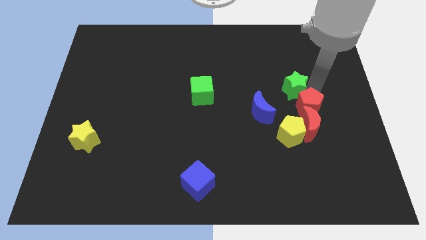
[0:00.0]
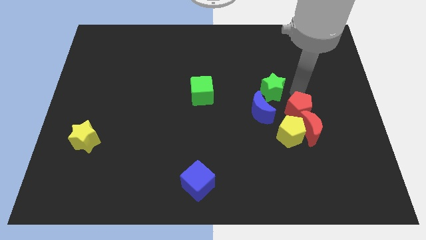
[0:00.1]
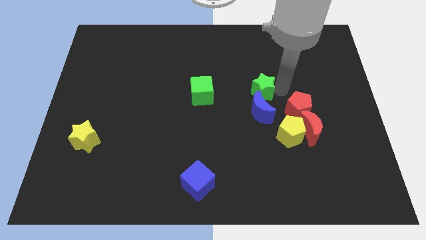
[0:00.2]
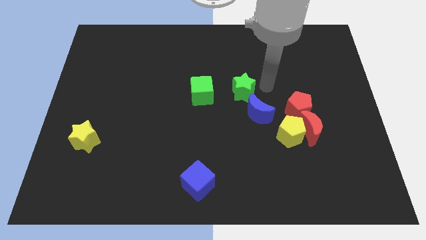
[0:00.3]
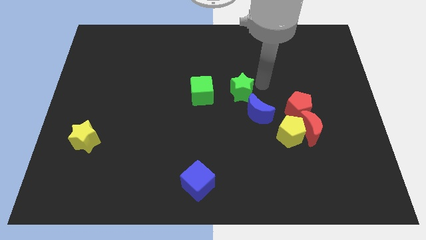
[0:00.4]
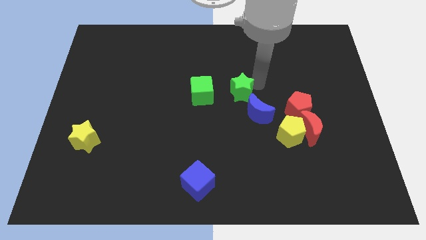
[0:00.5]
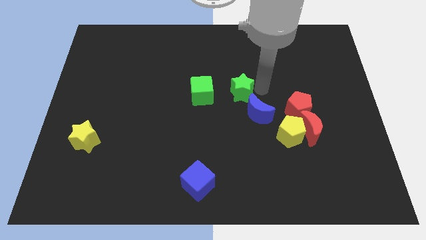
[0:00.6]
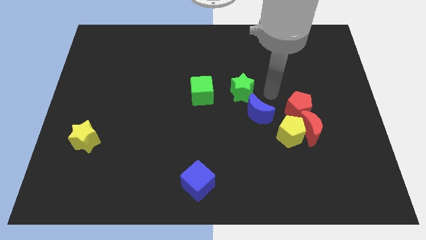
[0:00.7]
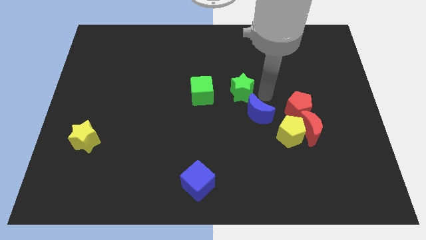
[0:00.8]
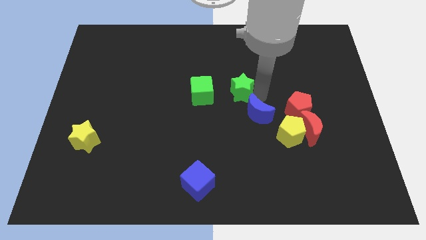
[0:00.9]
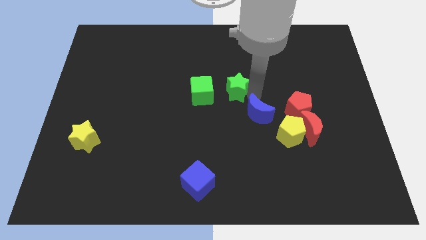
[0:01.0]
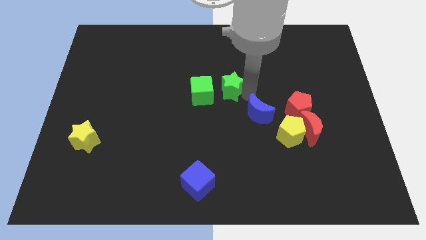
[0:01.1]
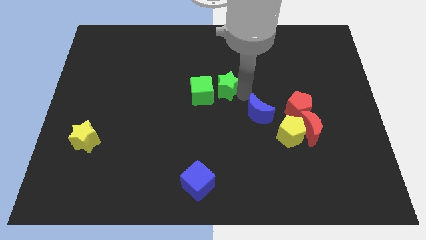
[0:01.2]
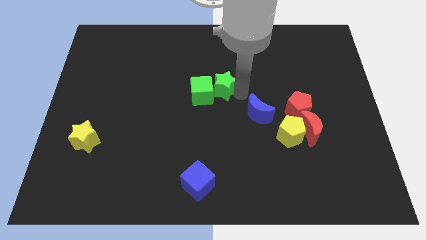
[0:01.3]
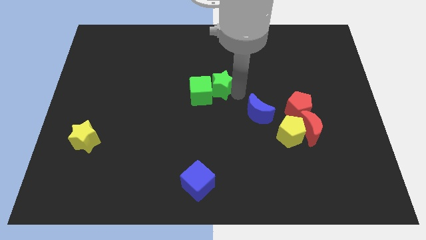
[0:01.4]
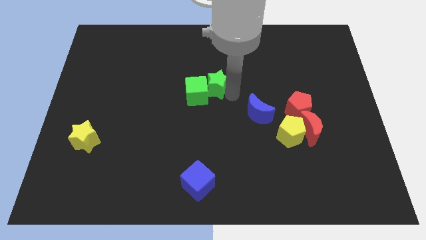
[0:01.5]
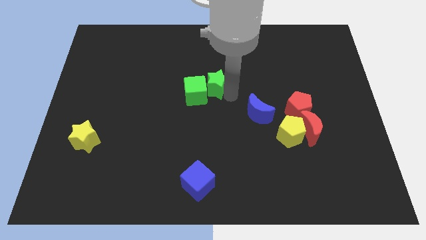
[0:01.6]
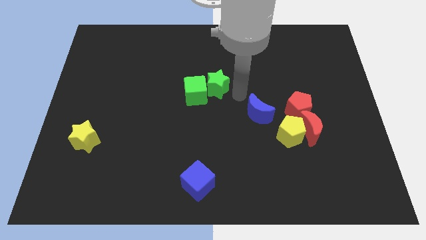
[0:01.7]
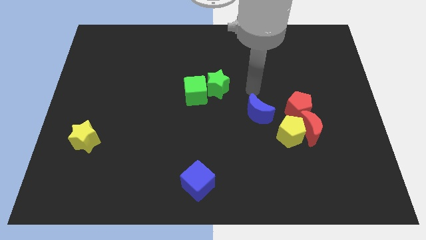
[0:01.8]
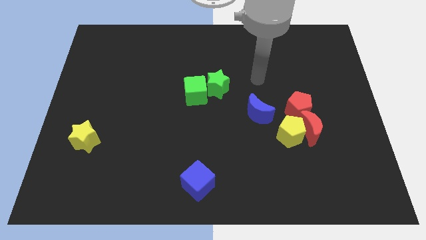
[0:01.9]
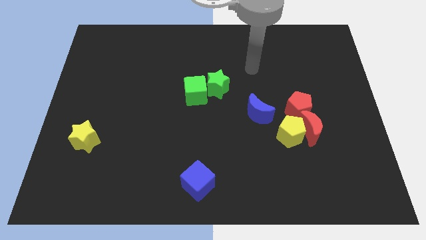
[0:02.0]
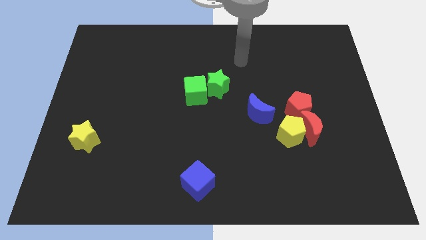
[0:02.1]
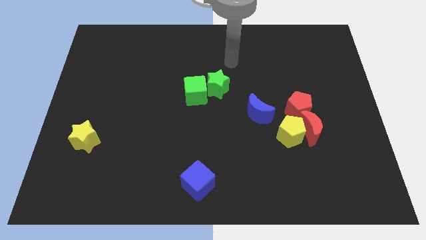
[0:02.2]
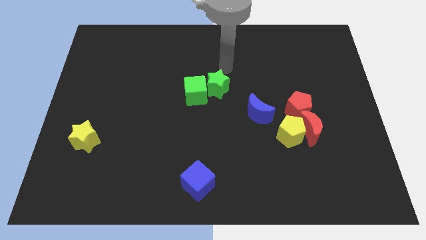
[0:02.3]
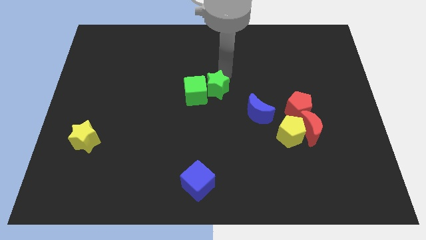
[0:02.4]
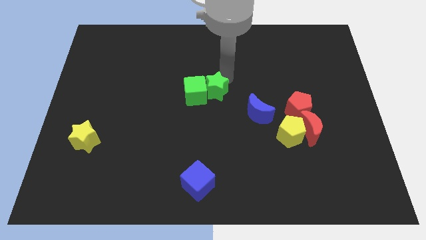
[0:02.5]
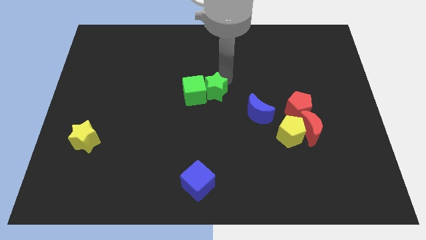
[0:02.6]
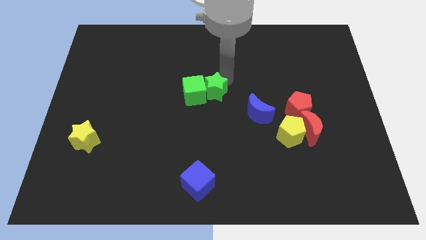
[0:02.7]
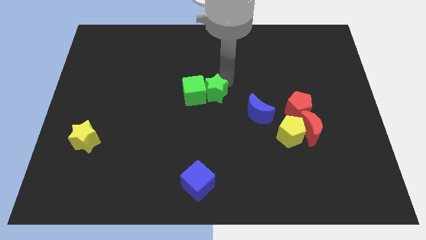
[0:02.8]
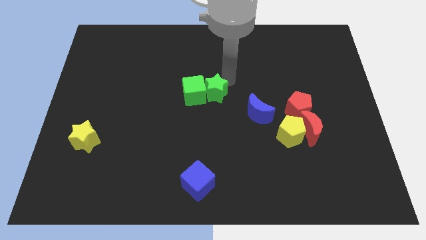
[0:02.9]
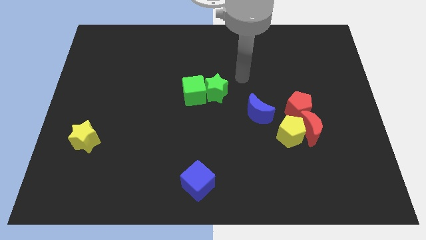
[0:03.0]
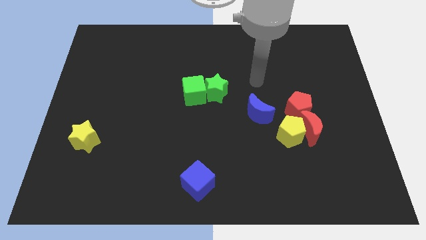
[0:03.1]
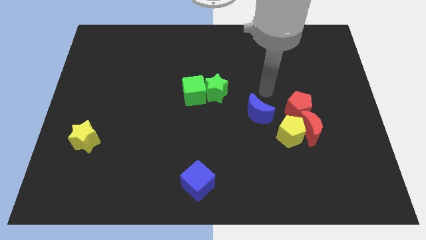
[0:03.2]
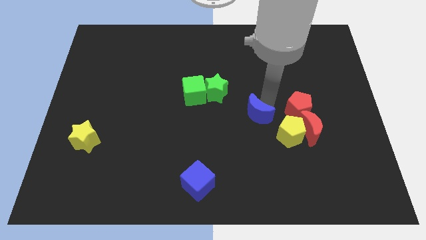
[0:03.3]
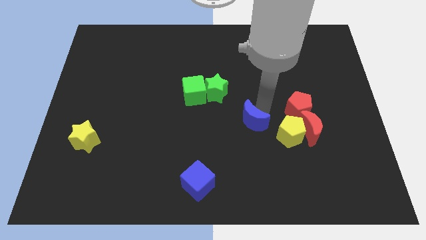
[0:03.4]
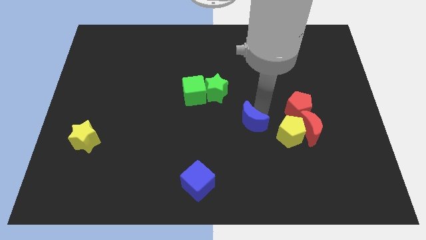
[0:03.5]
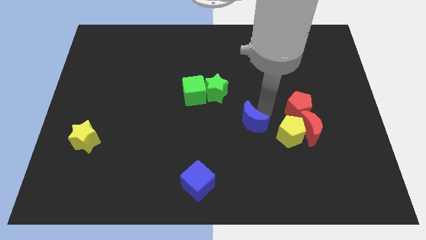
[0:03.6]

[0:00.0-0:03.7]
push the green star into the green cube

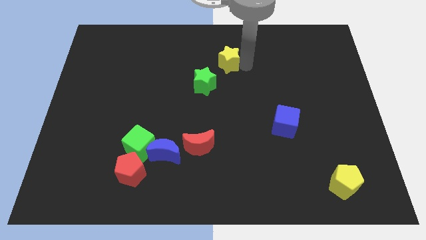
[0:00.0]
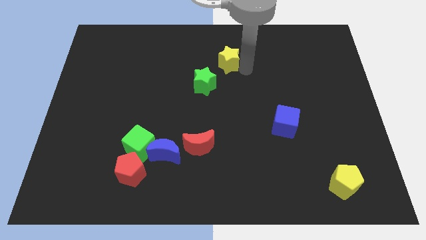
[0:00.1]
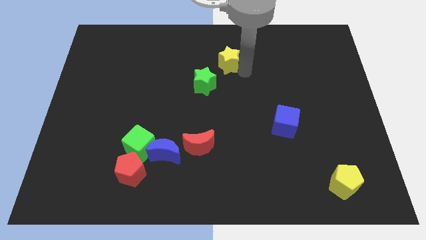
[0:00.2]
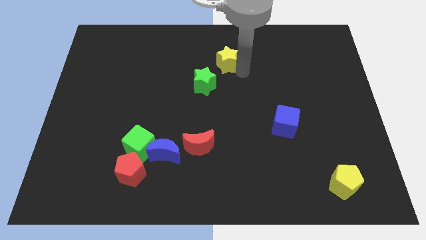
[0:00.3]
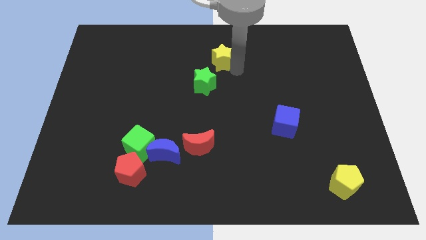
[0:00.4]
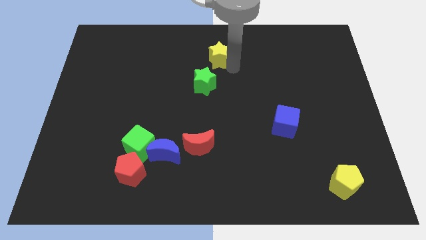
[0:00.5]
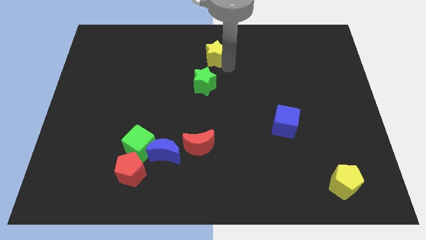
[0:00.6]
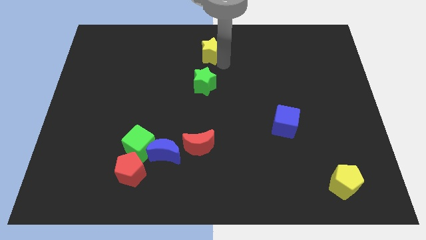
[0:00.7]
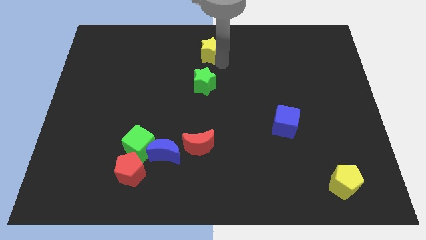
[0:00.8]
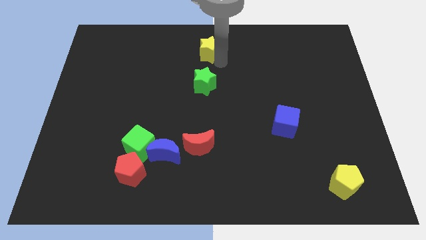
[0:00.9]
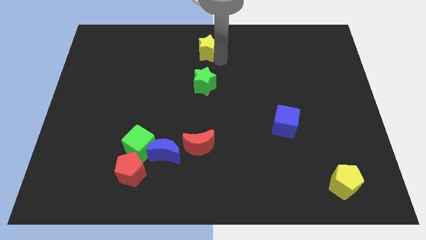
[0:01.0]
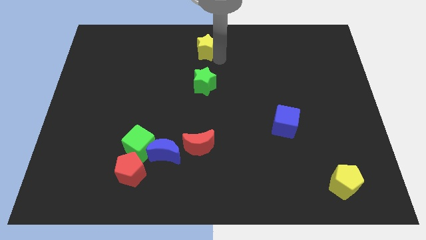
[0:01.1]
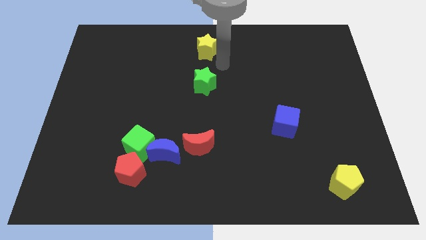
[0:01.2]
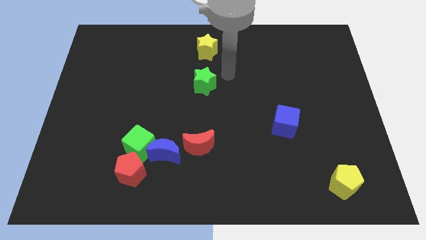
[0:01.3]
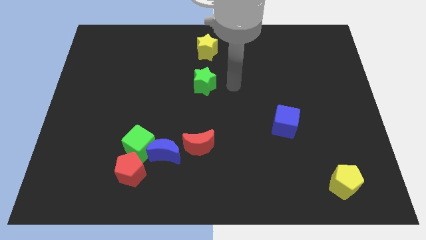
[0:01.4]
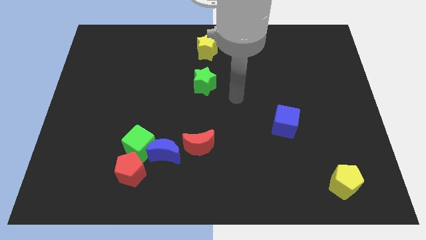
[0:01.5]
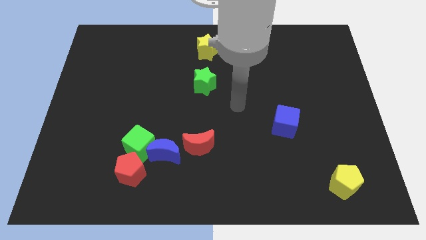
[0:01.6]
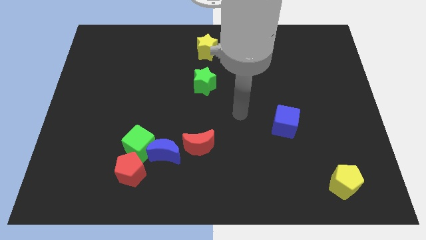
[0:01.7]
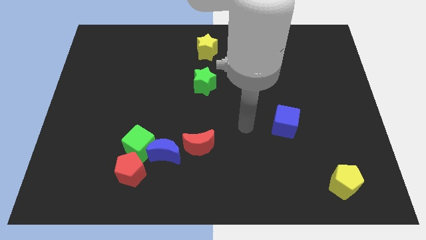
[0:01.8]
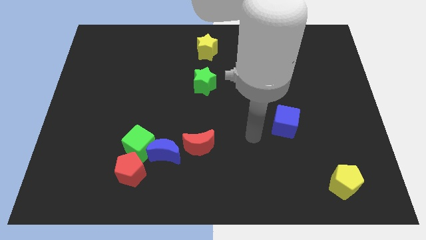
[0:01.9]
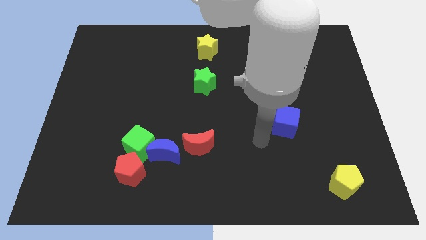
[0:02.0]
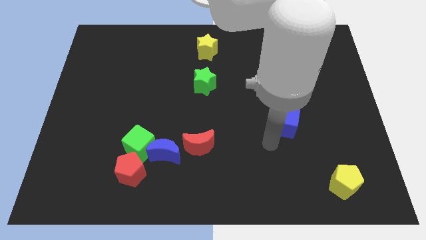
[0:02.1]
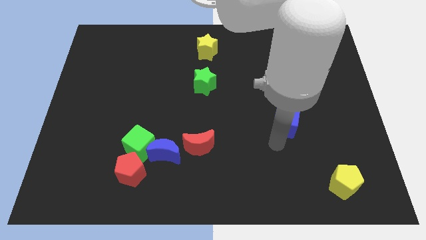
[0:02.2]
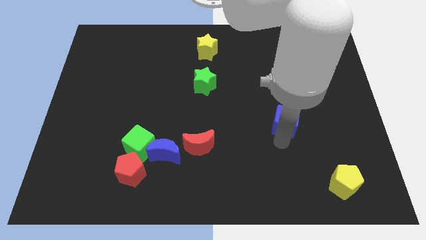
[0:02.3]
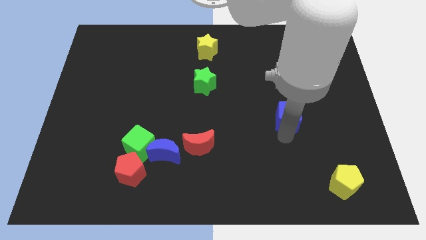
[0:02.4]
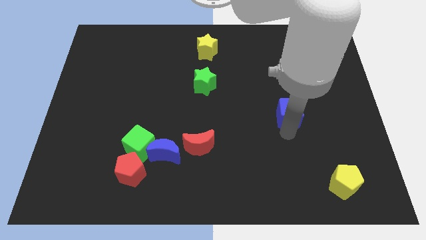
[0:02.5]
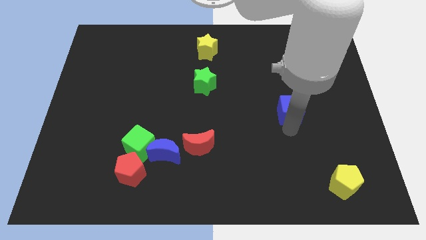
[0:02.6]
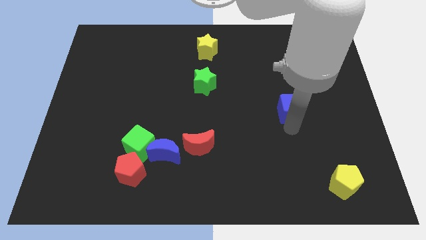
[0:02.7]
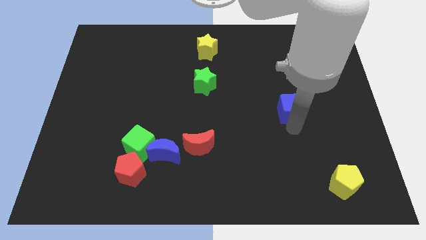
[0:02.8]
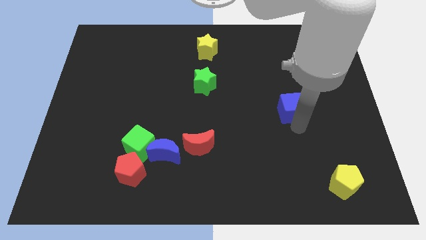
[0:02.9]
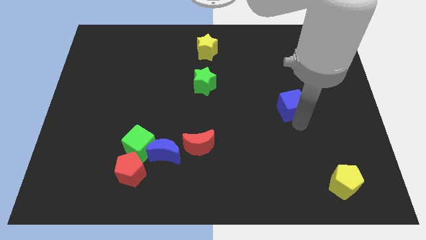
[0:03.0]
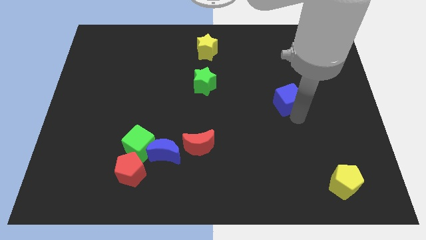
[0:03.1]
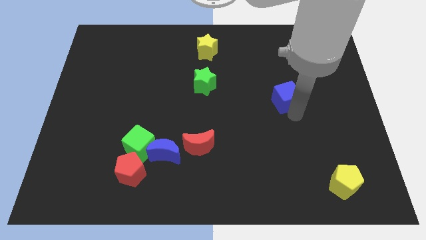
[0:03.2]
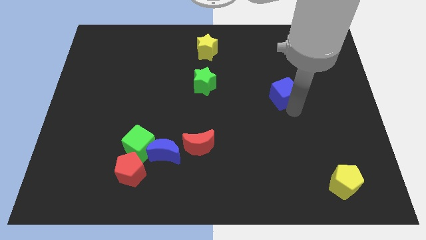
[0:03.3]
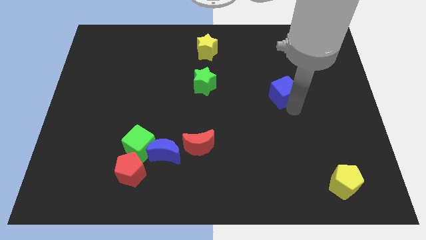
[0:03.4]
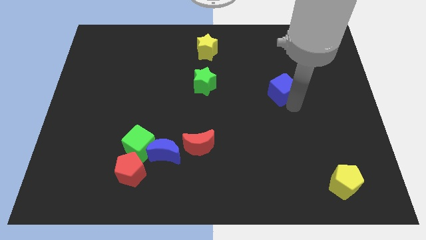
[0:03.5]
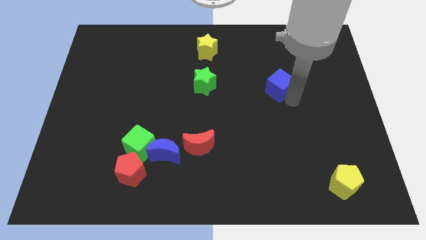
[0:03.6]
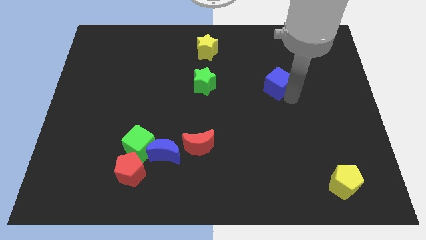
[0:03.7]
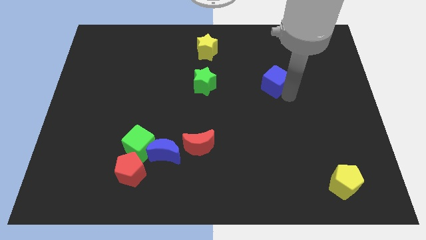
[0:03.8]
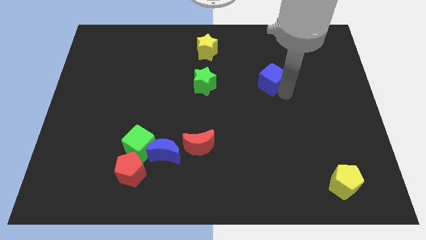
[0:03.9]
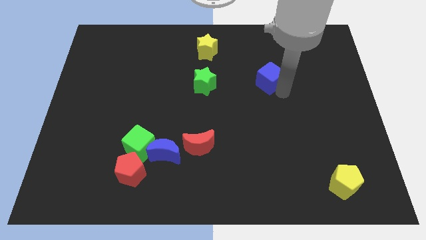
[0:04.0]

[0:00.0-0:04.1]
move blue cube up

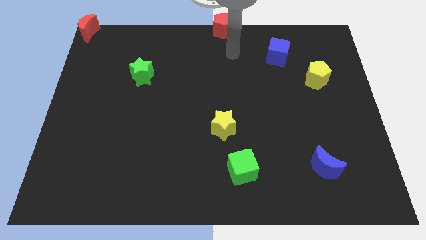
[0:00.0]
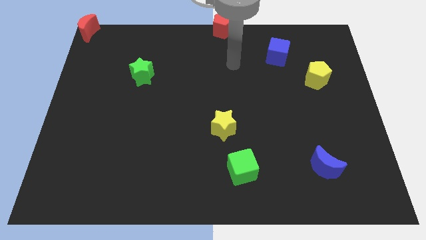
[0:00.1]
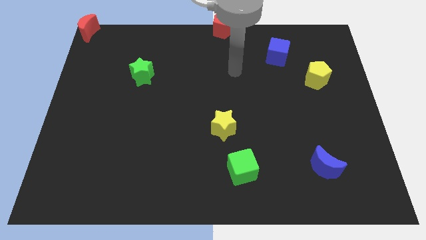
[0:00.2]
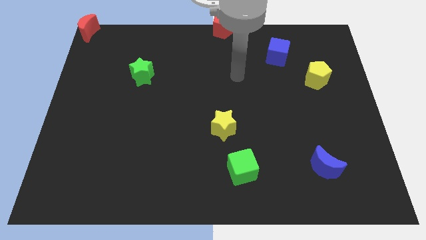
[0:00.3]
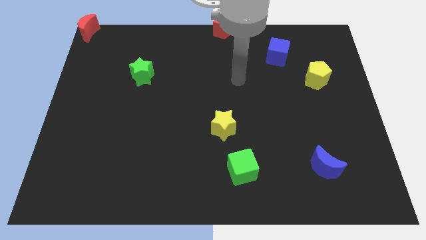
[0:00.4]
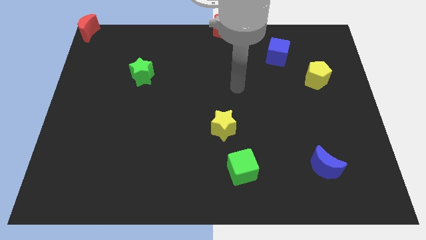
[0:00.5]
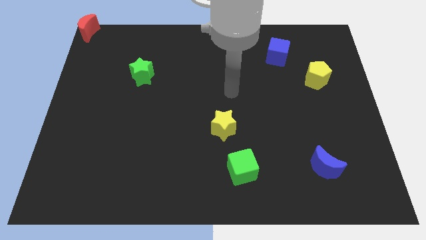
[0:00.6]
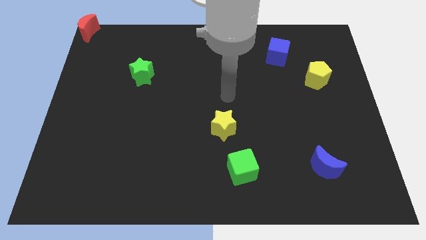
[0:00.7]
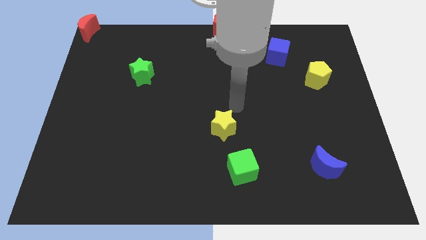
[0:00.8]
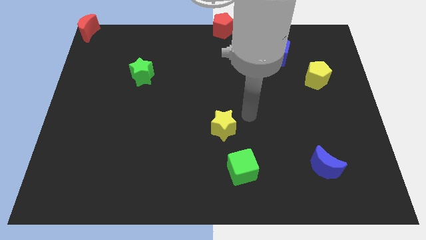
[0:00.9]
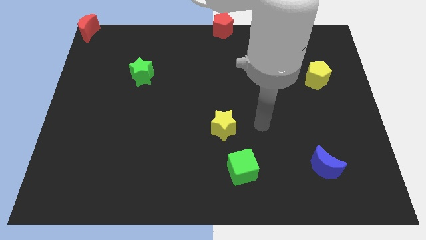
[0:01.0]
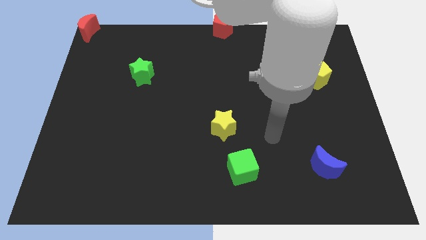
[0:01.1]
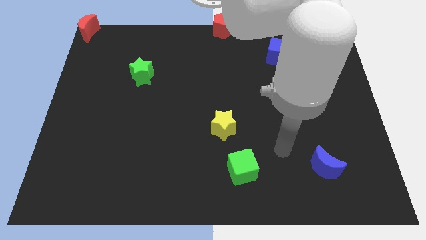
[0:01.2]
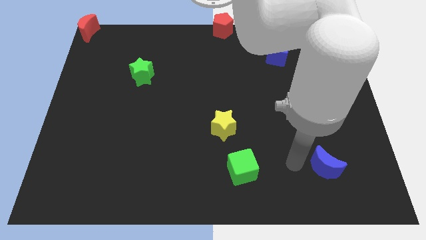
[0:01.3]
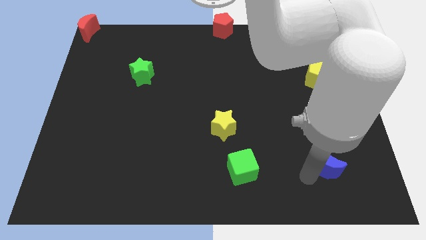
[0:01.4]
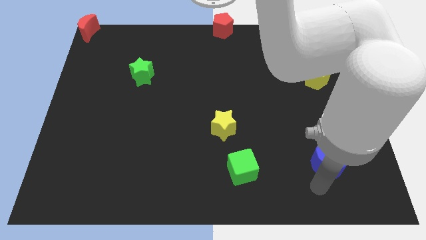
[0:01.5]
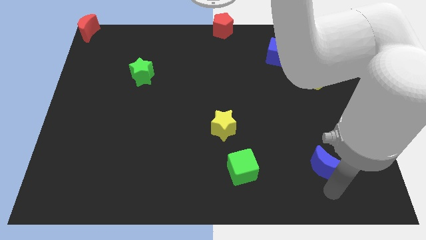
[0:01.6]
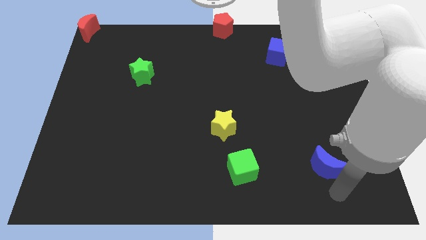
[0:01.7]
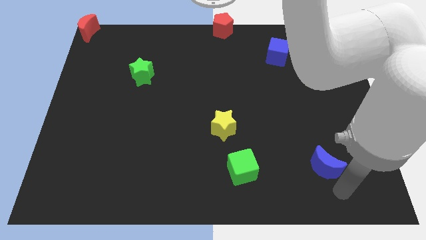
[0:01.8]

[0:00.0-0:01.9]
move your arm to the bottom of blue crescent
